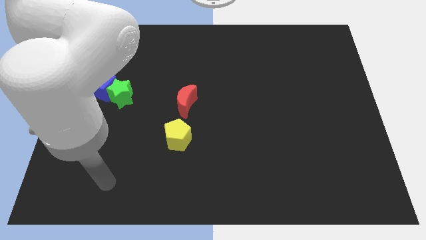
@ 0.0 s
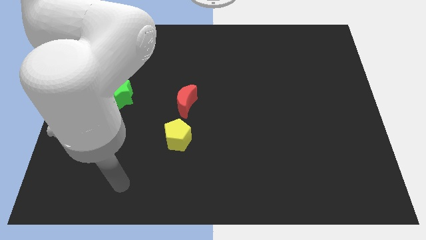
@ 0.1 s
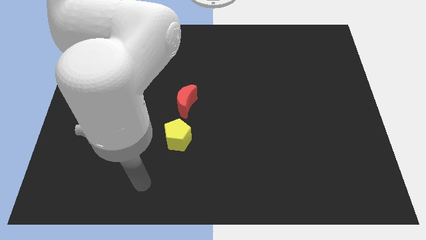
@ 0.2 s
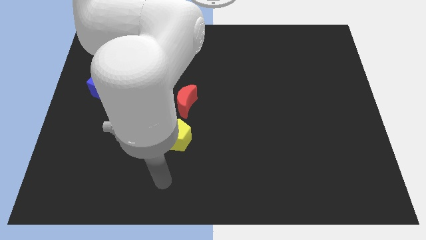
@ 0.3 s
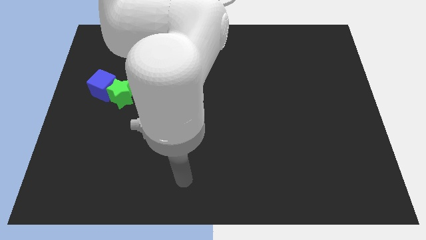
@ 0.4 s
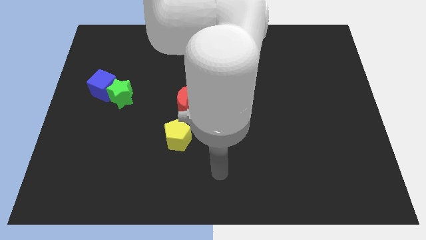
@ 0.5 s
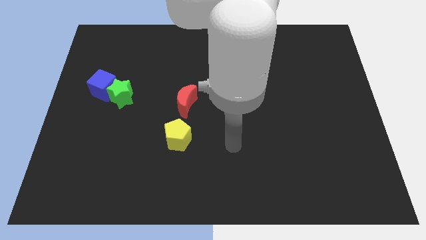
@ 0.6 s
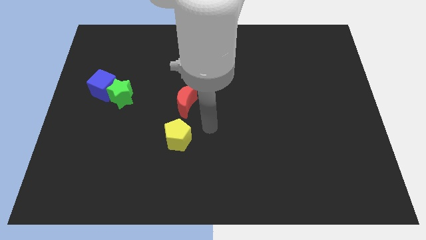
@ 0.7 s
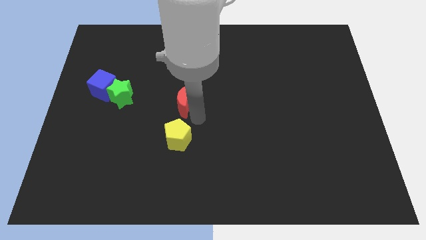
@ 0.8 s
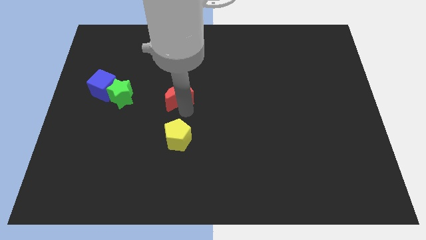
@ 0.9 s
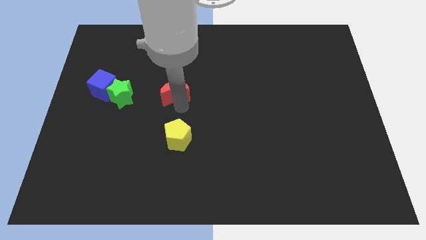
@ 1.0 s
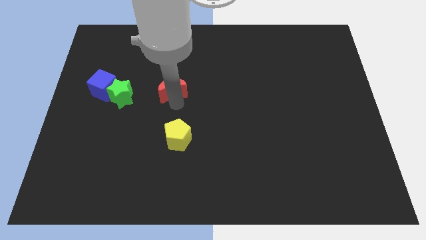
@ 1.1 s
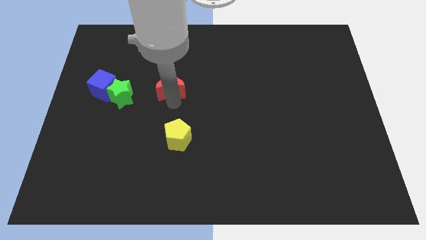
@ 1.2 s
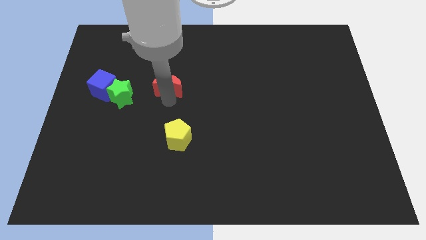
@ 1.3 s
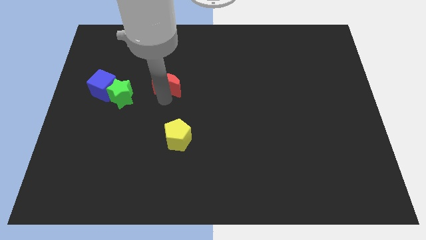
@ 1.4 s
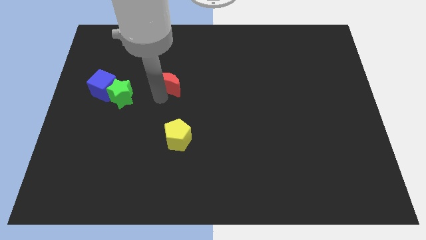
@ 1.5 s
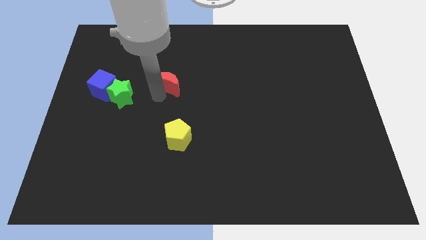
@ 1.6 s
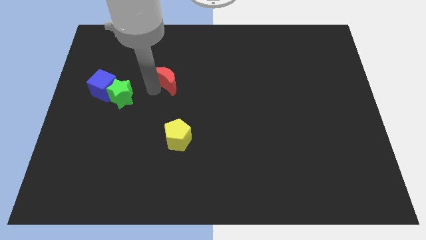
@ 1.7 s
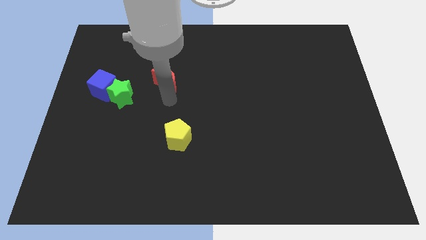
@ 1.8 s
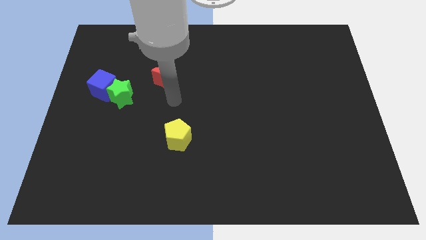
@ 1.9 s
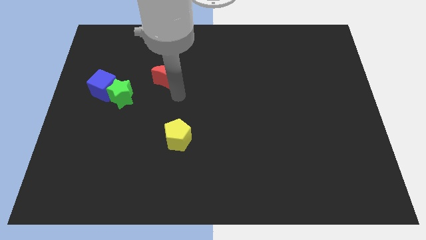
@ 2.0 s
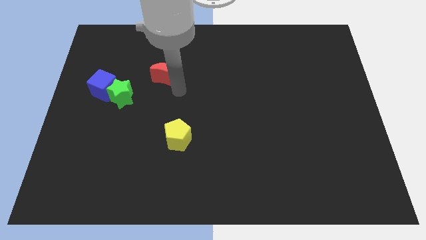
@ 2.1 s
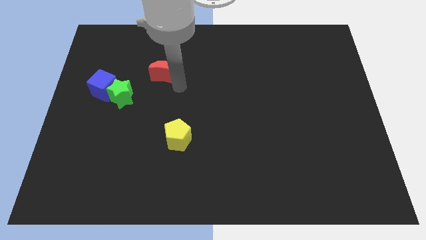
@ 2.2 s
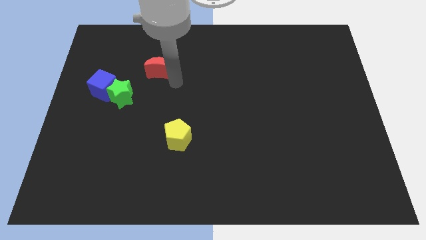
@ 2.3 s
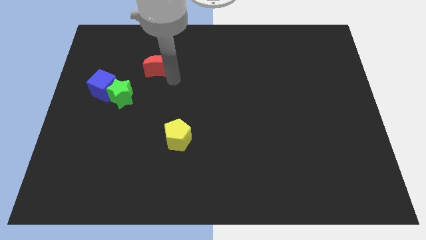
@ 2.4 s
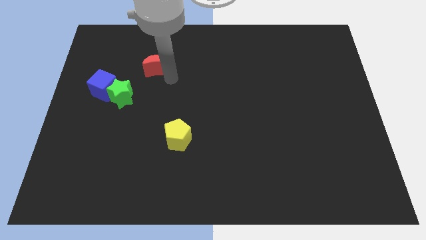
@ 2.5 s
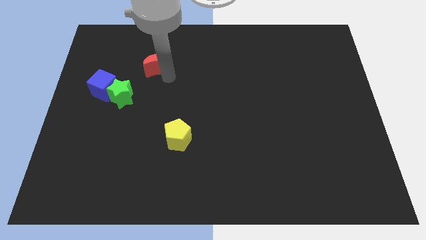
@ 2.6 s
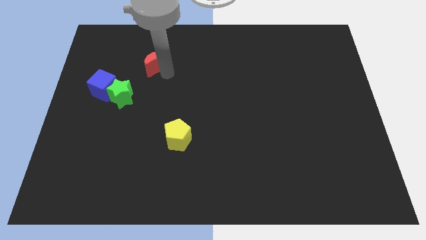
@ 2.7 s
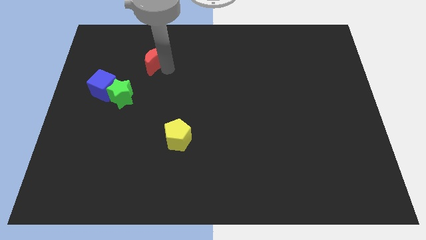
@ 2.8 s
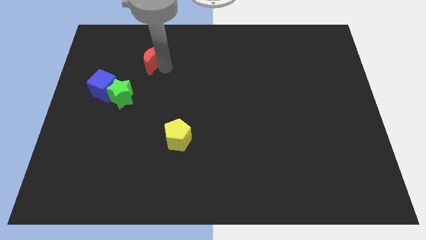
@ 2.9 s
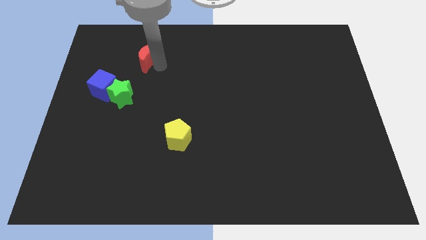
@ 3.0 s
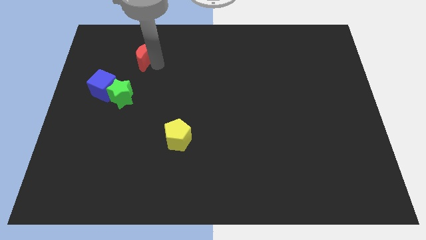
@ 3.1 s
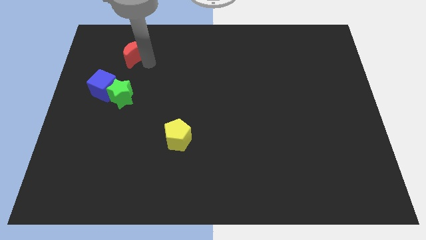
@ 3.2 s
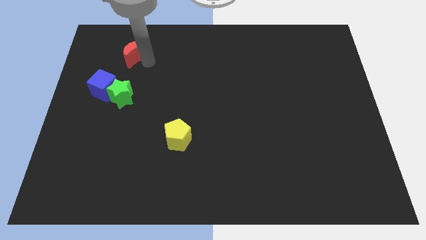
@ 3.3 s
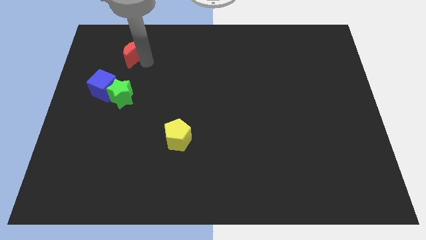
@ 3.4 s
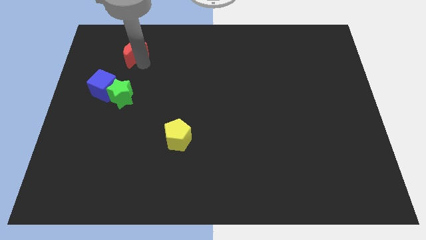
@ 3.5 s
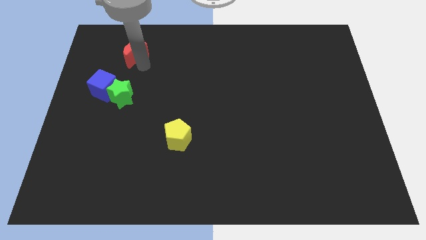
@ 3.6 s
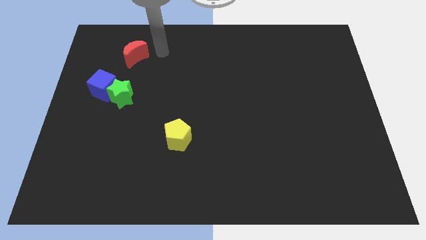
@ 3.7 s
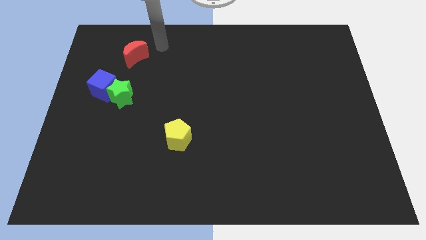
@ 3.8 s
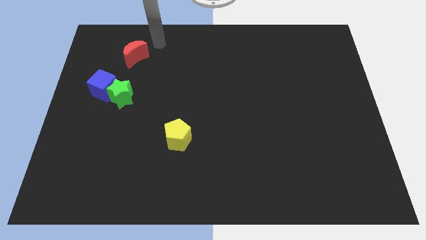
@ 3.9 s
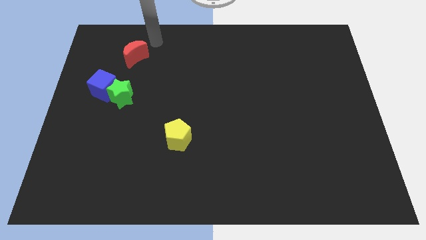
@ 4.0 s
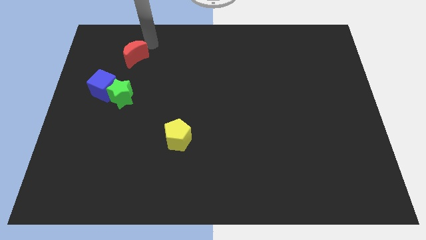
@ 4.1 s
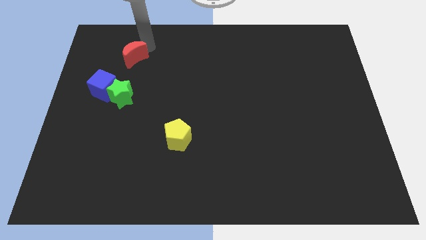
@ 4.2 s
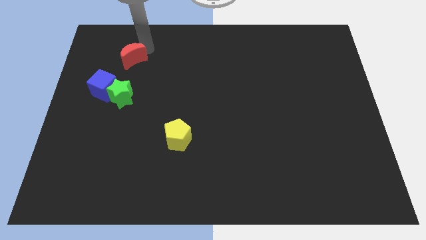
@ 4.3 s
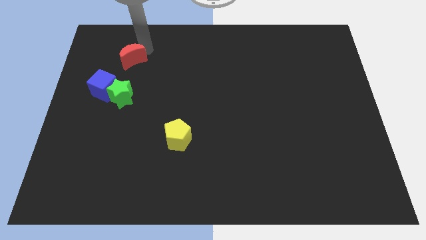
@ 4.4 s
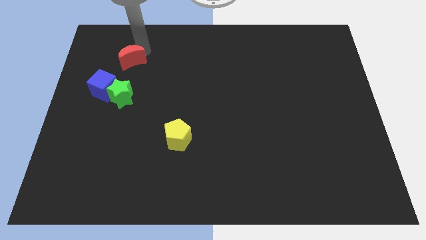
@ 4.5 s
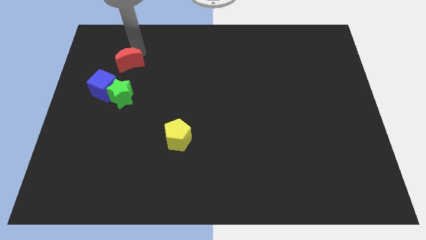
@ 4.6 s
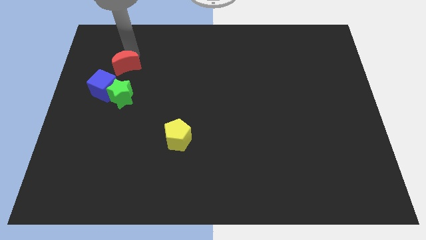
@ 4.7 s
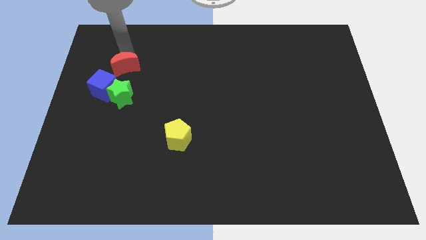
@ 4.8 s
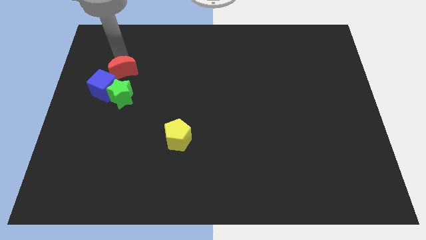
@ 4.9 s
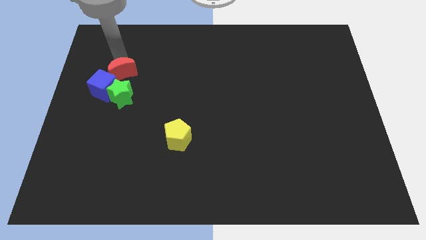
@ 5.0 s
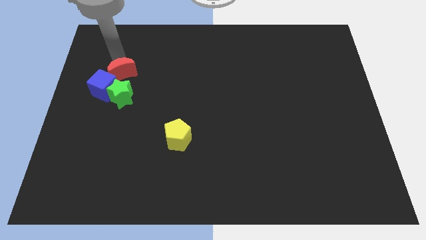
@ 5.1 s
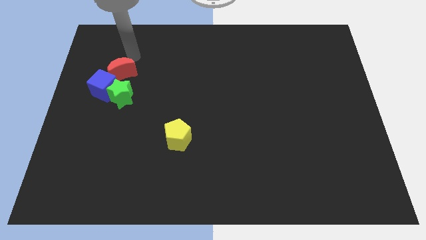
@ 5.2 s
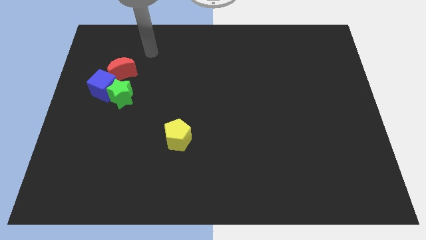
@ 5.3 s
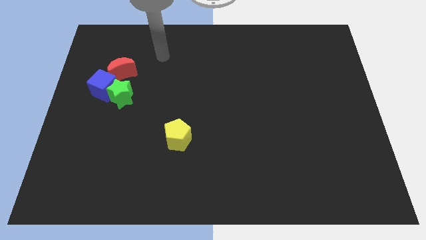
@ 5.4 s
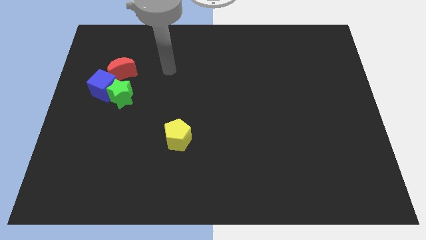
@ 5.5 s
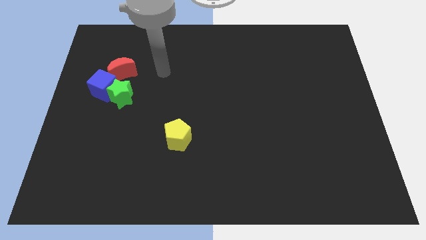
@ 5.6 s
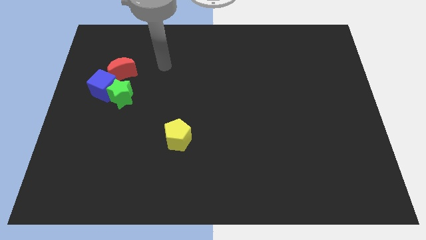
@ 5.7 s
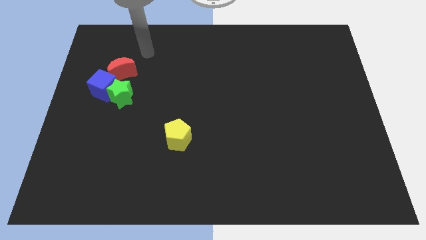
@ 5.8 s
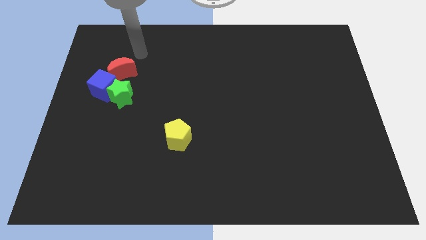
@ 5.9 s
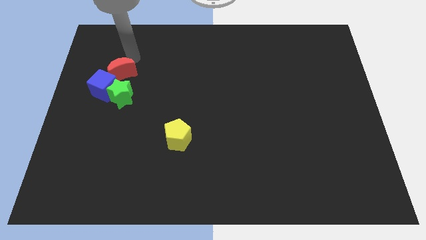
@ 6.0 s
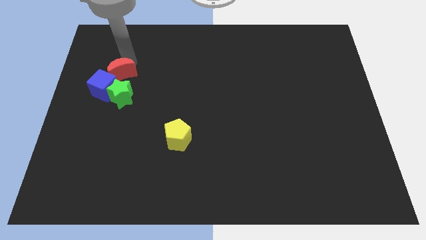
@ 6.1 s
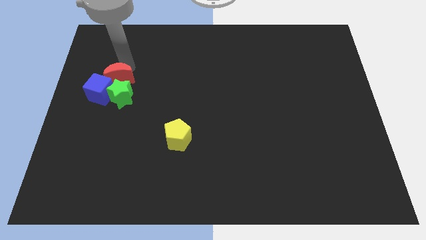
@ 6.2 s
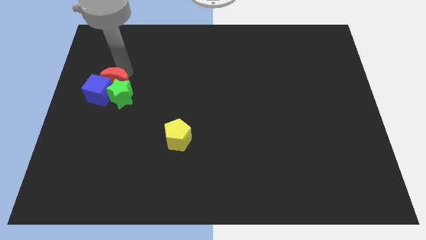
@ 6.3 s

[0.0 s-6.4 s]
move the red block close to the blue block

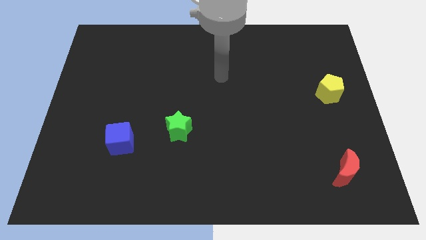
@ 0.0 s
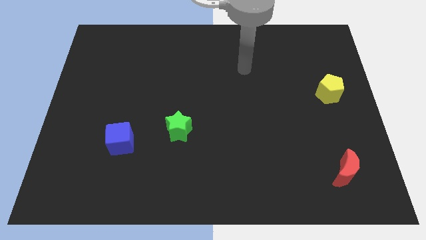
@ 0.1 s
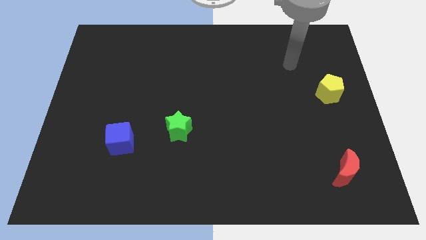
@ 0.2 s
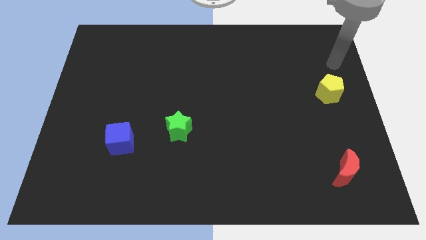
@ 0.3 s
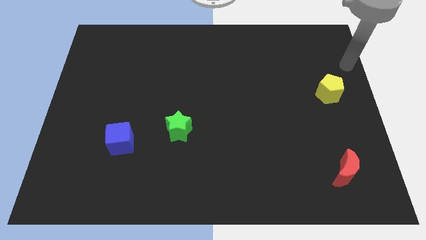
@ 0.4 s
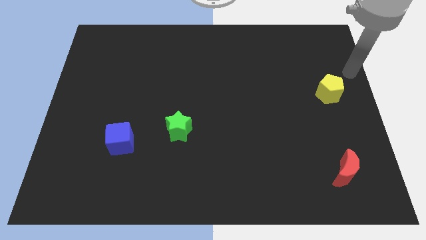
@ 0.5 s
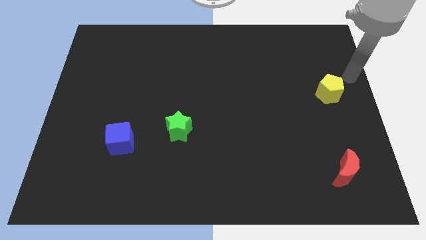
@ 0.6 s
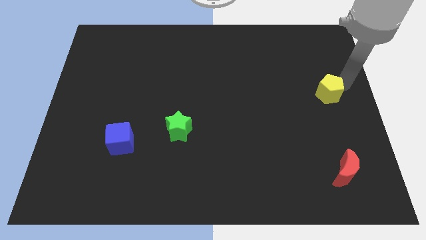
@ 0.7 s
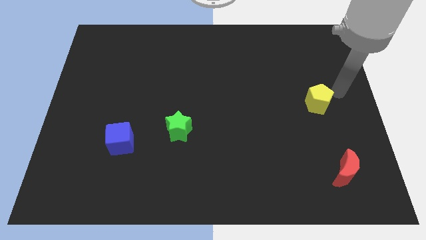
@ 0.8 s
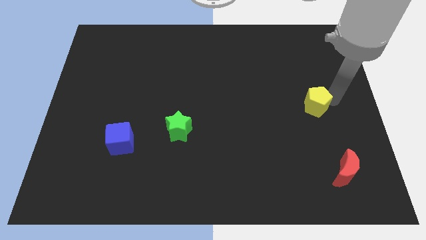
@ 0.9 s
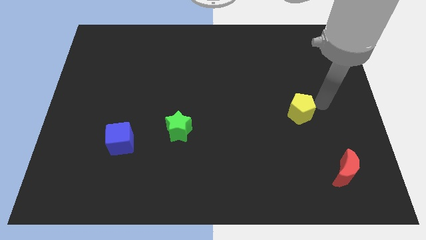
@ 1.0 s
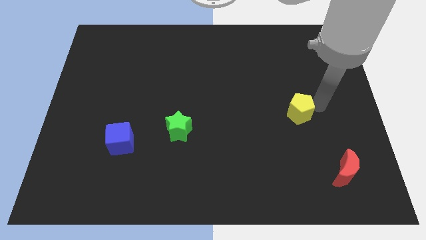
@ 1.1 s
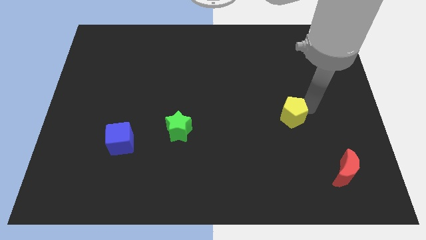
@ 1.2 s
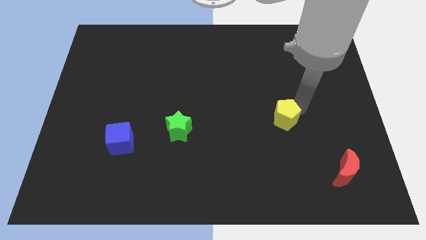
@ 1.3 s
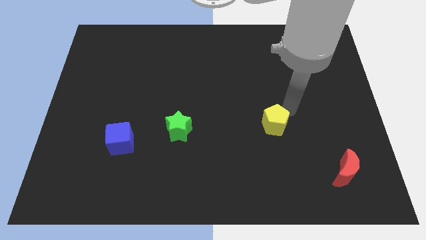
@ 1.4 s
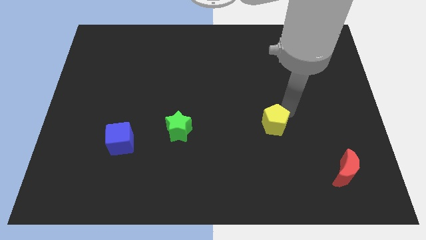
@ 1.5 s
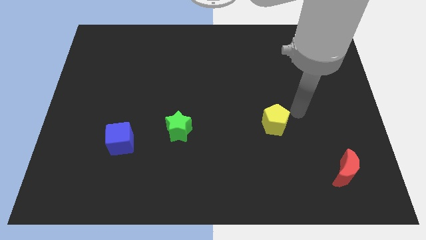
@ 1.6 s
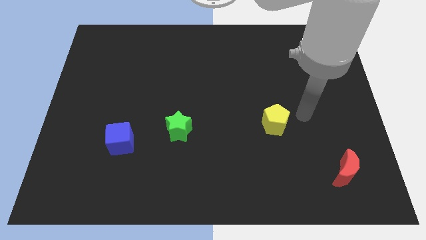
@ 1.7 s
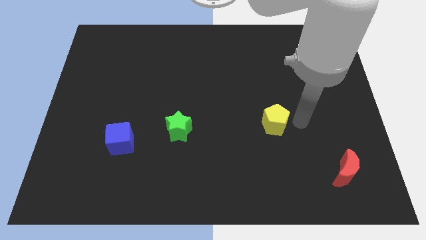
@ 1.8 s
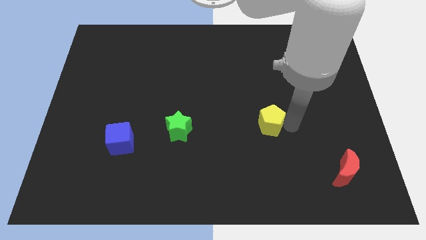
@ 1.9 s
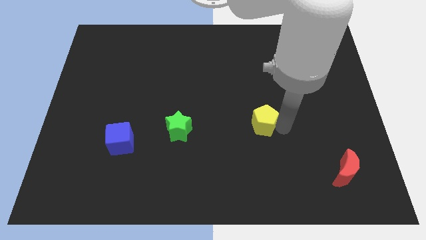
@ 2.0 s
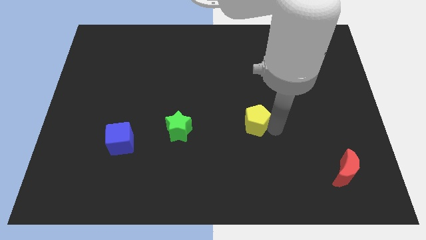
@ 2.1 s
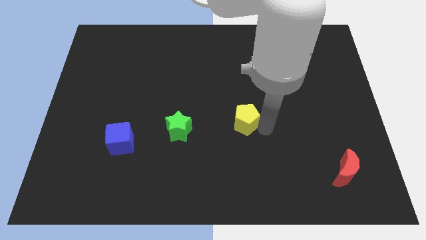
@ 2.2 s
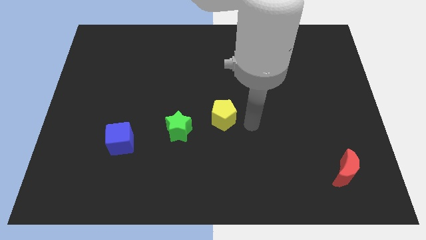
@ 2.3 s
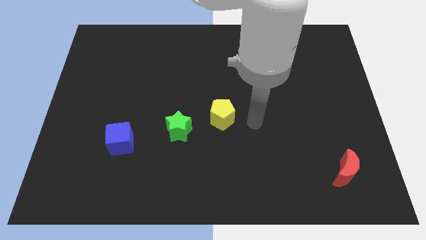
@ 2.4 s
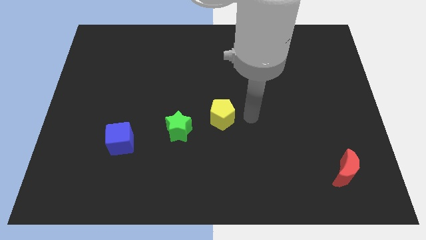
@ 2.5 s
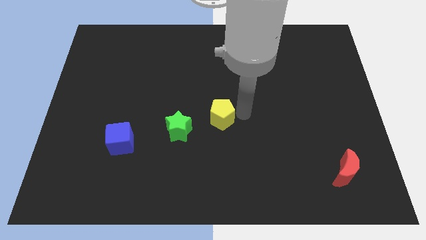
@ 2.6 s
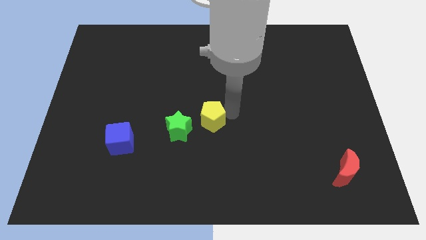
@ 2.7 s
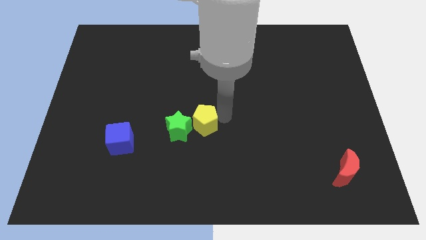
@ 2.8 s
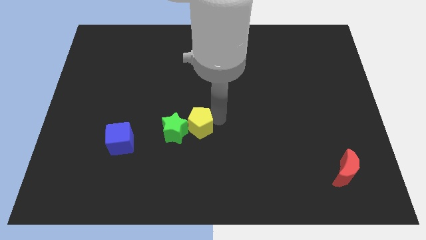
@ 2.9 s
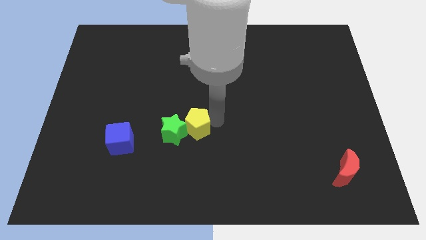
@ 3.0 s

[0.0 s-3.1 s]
push the yellow pentagon towards the star
